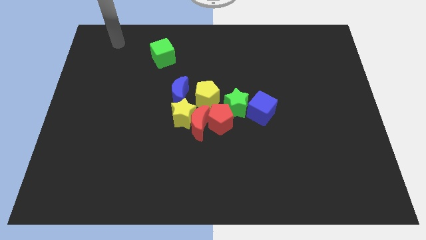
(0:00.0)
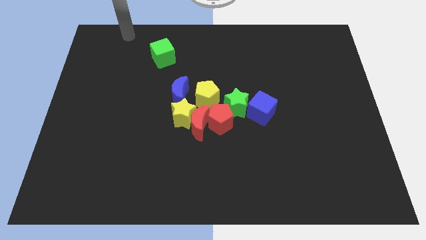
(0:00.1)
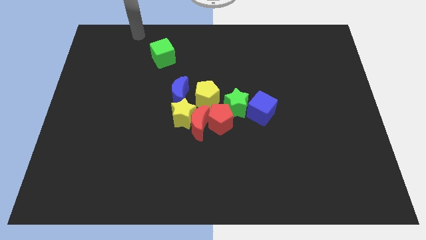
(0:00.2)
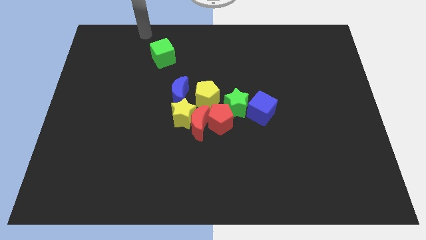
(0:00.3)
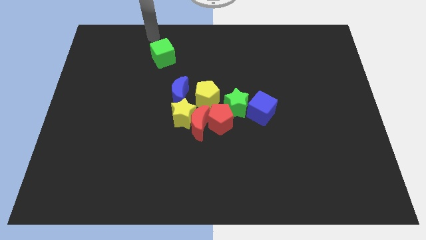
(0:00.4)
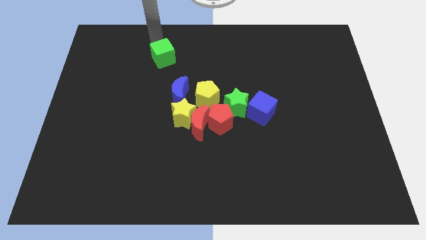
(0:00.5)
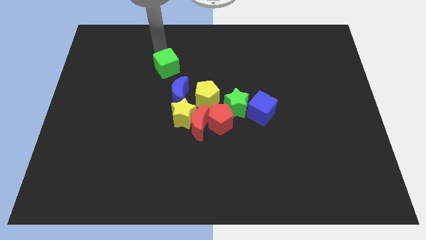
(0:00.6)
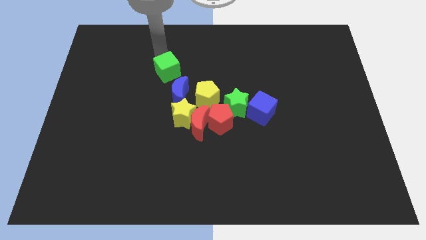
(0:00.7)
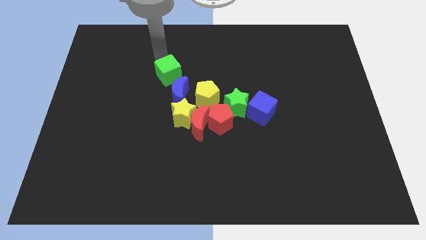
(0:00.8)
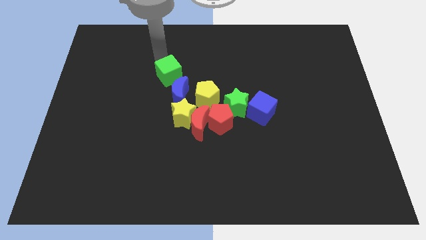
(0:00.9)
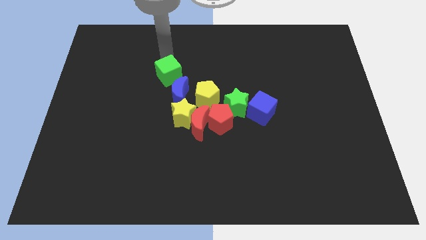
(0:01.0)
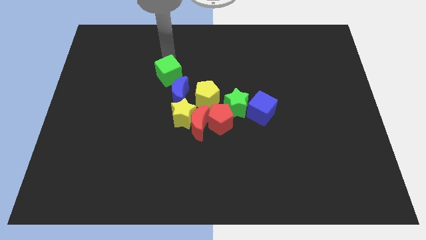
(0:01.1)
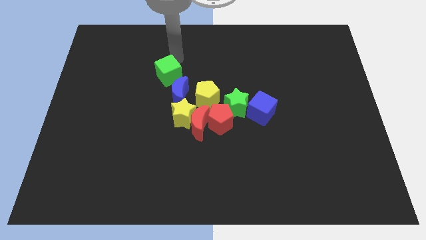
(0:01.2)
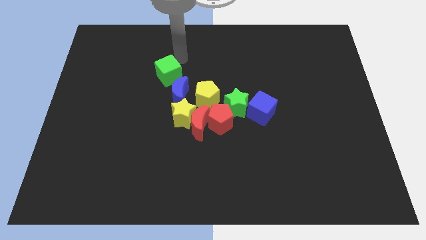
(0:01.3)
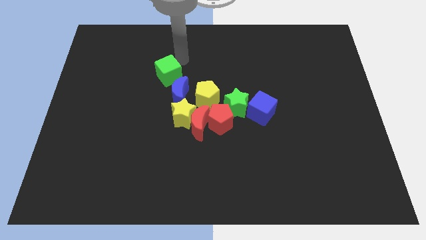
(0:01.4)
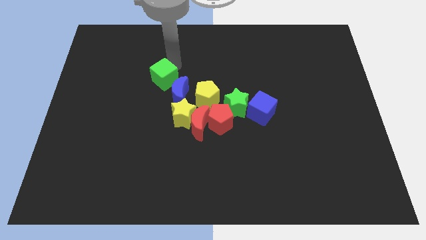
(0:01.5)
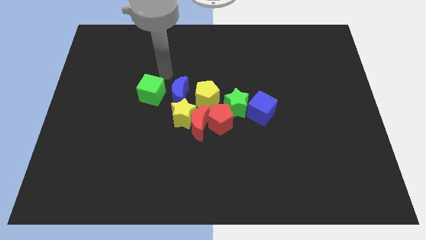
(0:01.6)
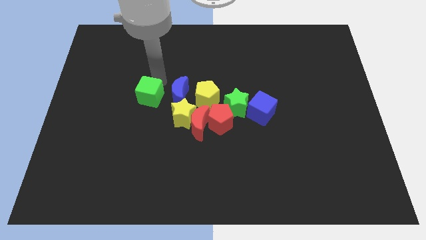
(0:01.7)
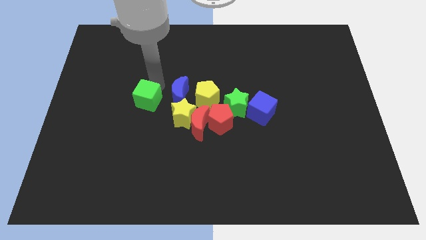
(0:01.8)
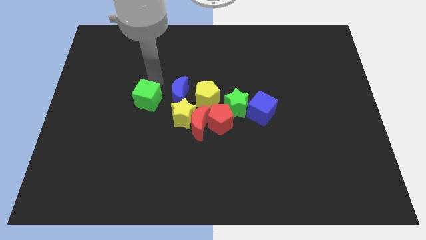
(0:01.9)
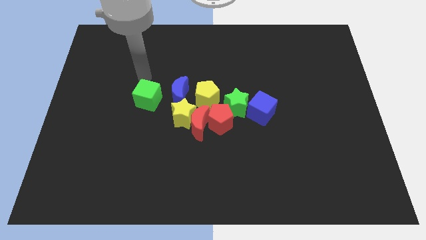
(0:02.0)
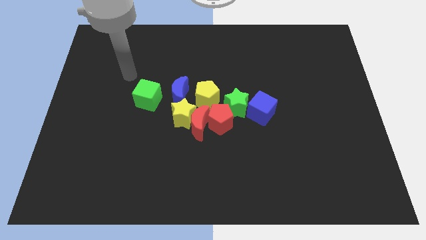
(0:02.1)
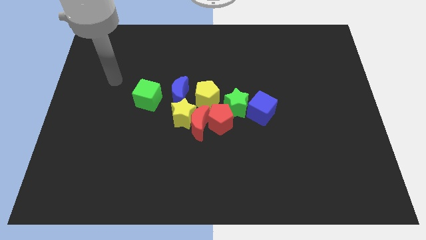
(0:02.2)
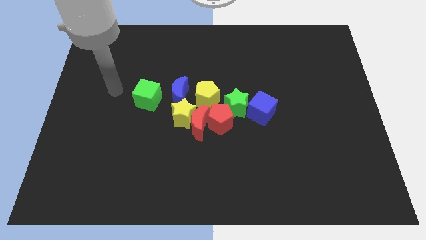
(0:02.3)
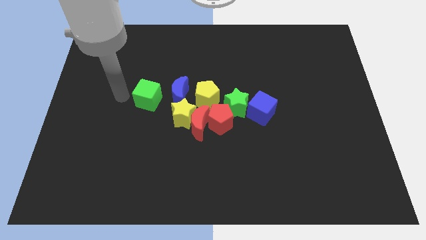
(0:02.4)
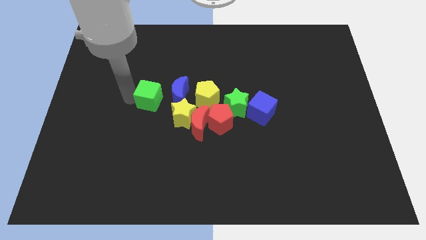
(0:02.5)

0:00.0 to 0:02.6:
move the green cube slightly to the bottom side of the board

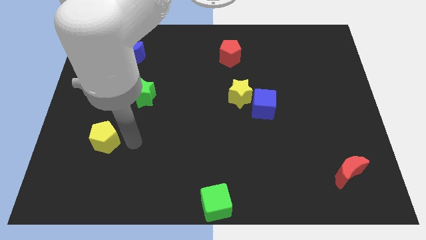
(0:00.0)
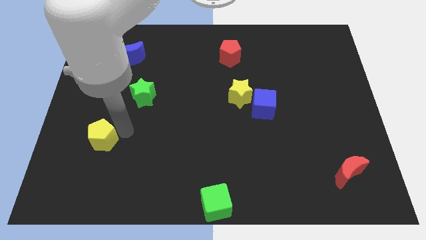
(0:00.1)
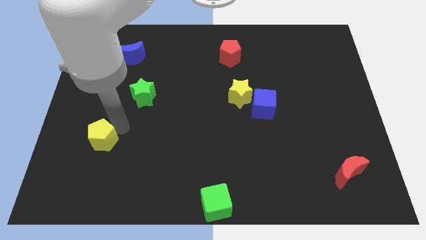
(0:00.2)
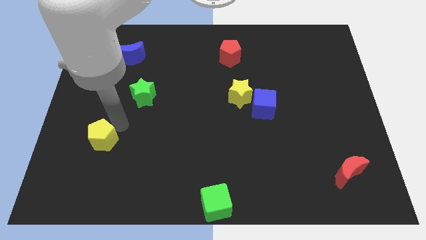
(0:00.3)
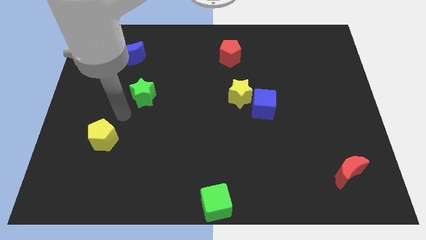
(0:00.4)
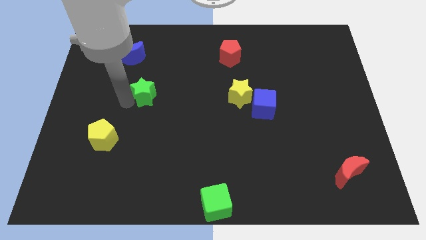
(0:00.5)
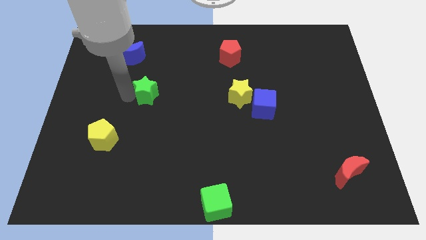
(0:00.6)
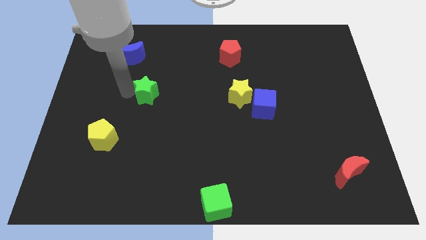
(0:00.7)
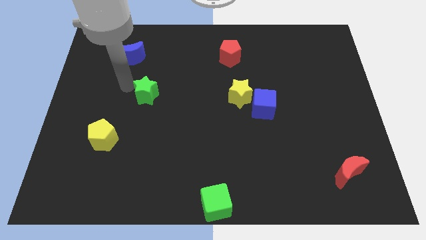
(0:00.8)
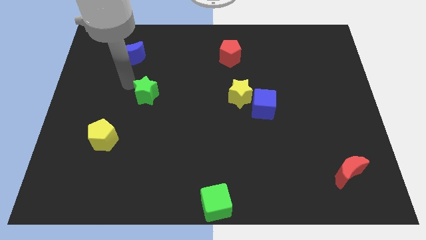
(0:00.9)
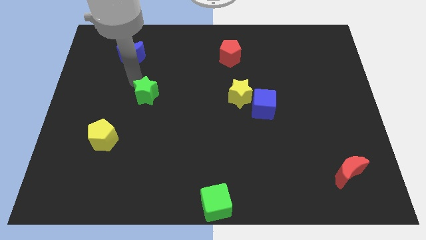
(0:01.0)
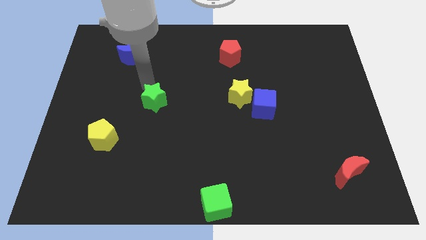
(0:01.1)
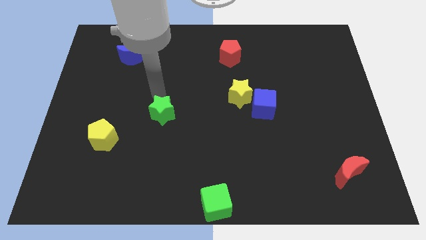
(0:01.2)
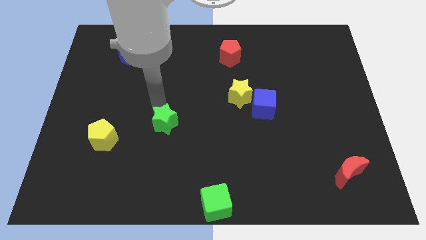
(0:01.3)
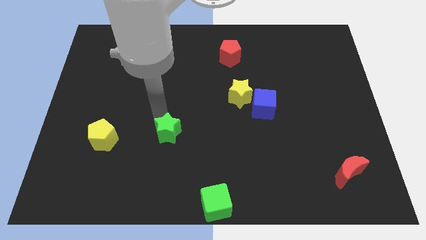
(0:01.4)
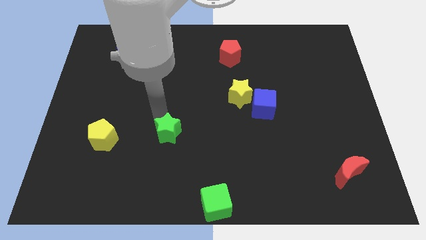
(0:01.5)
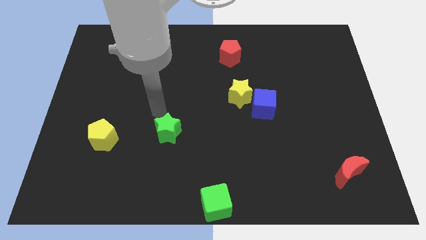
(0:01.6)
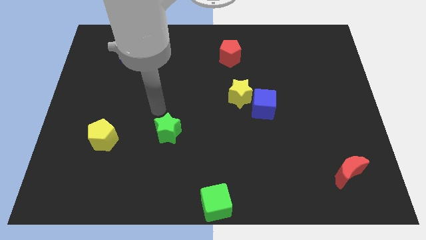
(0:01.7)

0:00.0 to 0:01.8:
place the green star to the right side of the yellow pentagon

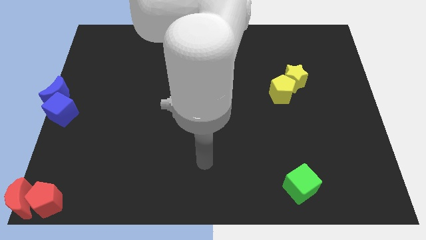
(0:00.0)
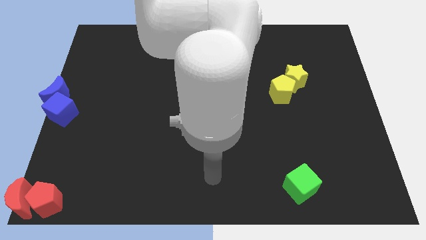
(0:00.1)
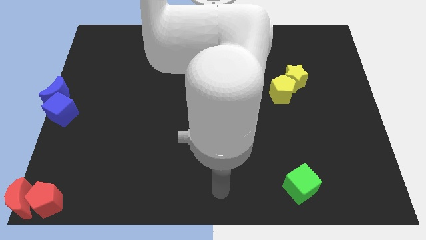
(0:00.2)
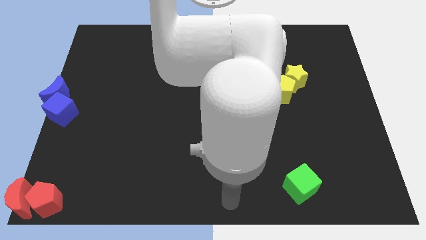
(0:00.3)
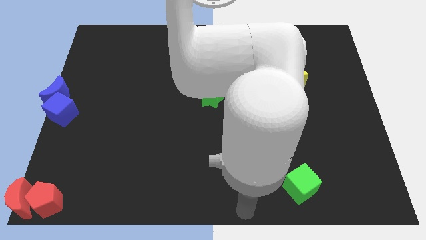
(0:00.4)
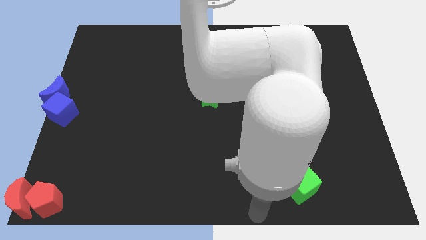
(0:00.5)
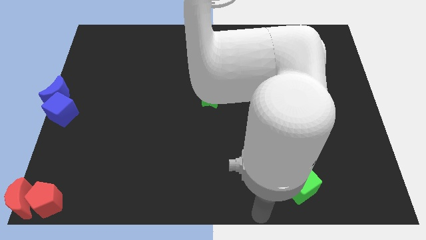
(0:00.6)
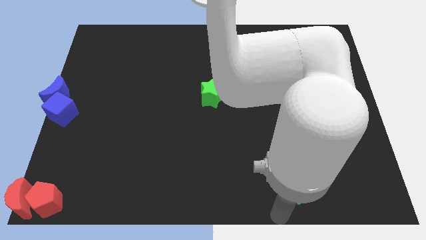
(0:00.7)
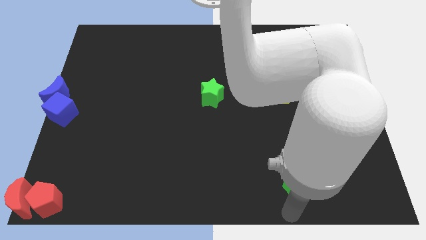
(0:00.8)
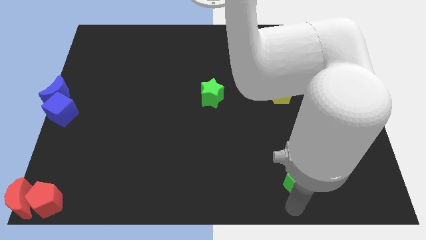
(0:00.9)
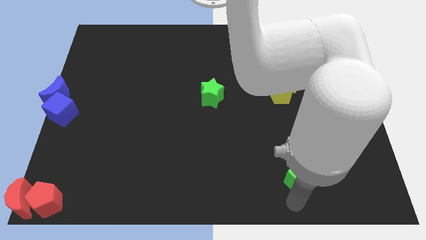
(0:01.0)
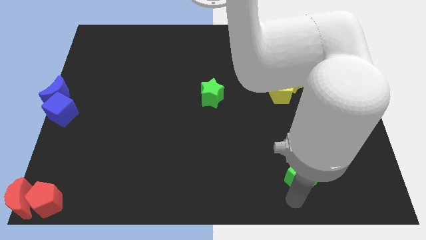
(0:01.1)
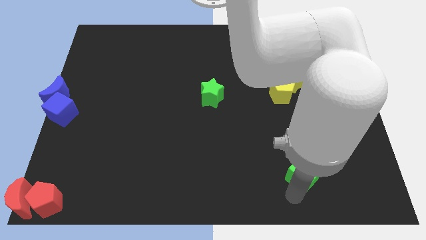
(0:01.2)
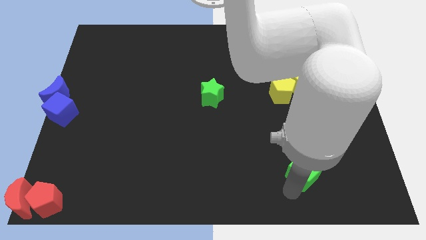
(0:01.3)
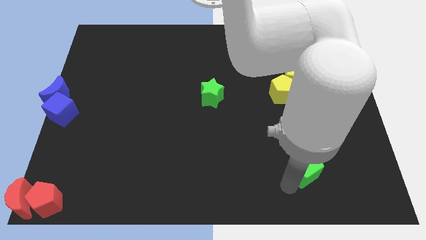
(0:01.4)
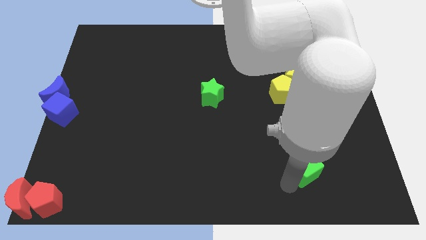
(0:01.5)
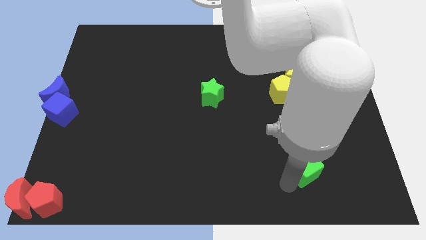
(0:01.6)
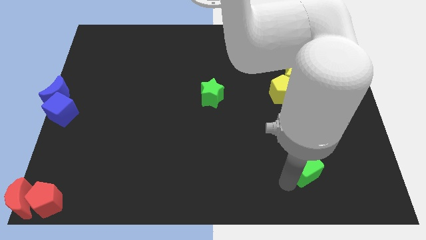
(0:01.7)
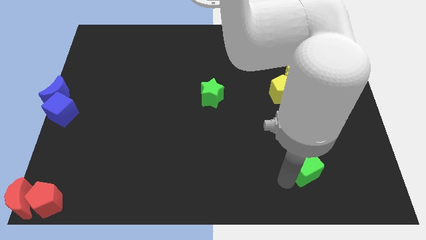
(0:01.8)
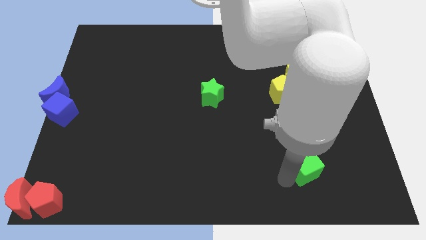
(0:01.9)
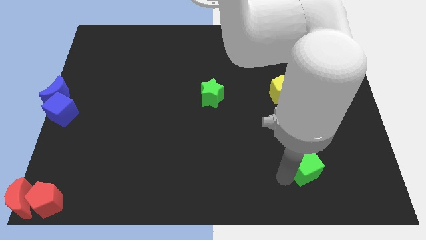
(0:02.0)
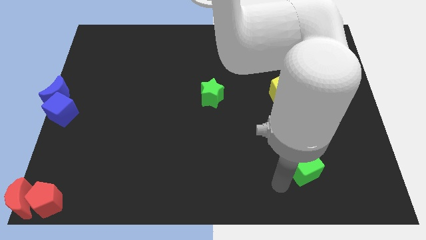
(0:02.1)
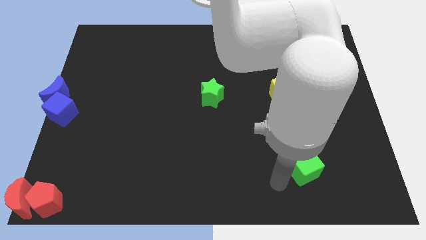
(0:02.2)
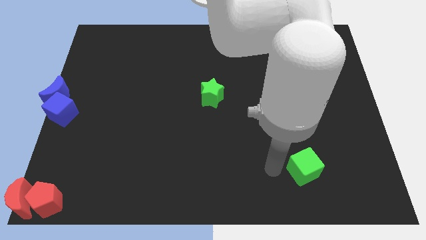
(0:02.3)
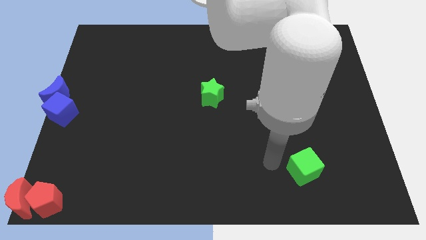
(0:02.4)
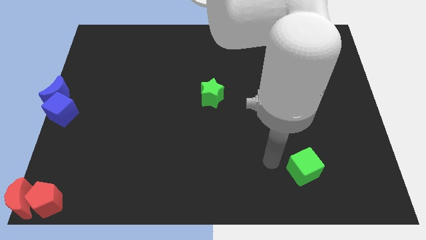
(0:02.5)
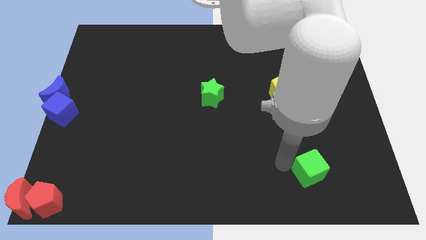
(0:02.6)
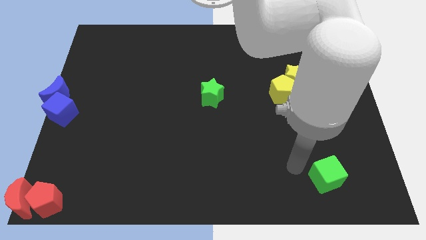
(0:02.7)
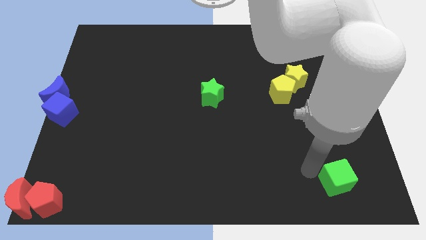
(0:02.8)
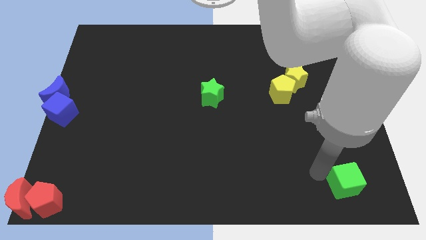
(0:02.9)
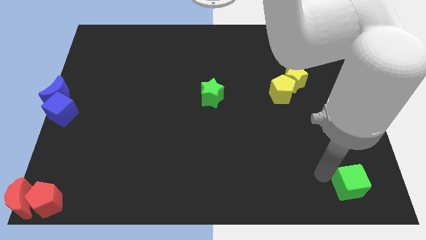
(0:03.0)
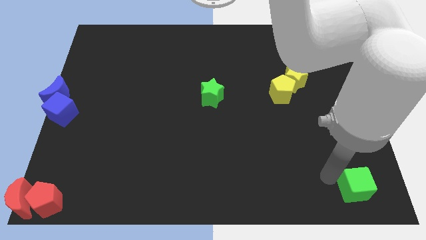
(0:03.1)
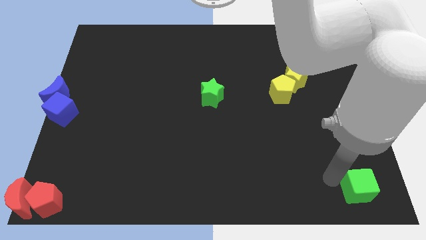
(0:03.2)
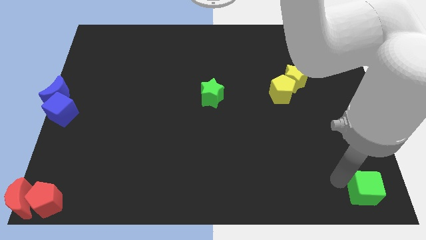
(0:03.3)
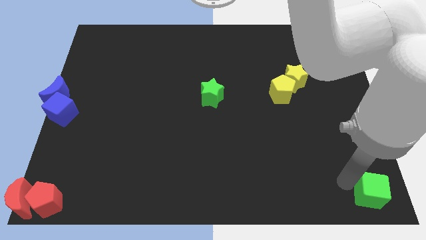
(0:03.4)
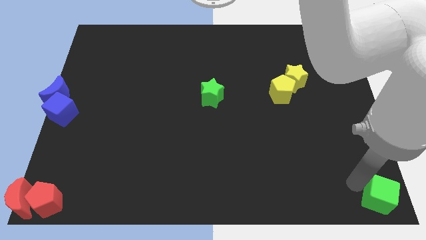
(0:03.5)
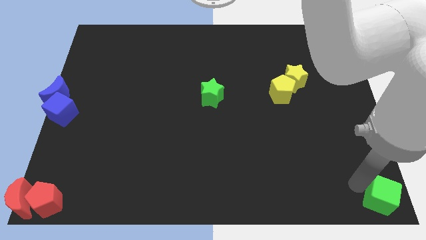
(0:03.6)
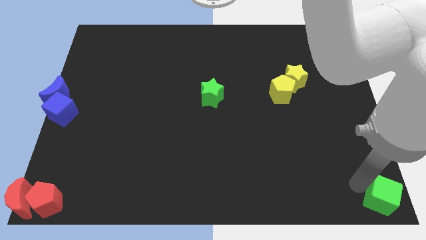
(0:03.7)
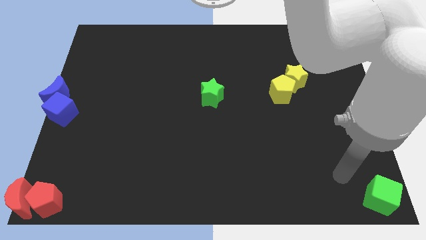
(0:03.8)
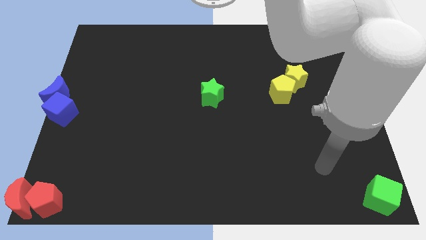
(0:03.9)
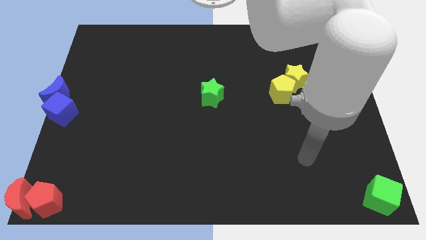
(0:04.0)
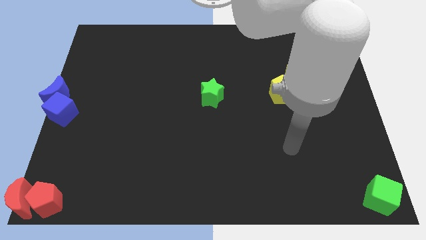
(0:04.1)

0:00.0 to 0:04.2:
place the green cube to the bottom right

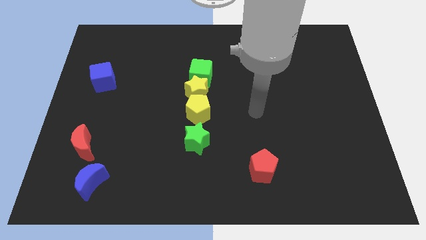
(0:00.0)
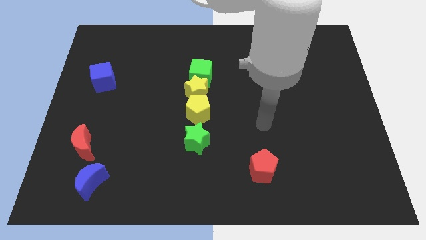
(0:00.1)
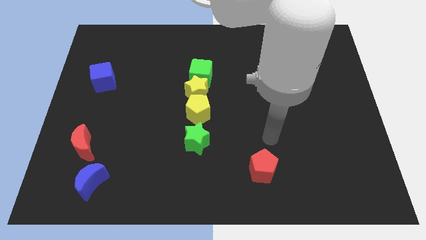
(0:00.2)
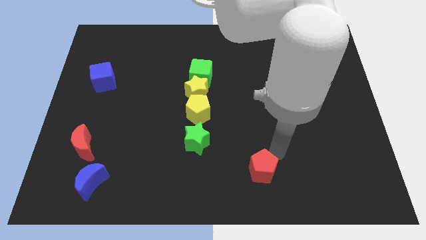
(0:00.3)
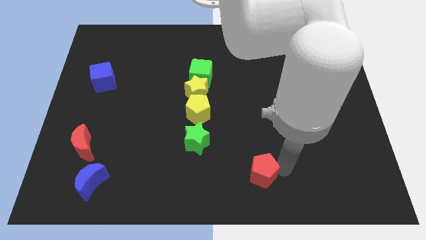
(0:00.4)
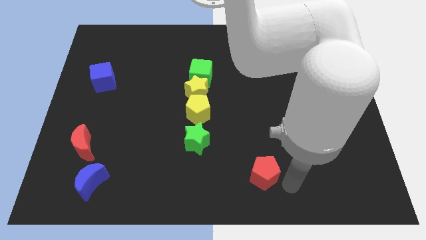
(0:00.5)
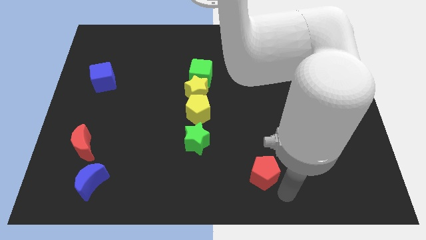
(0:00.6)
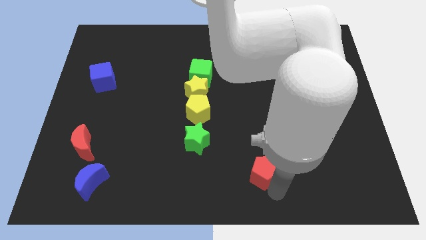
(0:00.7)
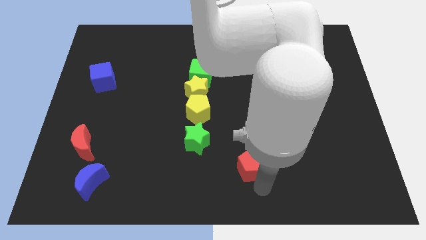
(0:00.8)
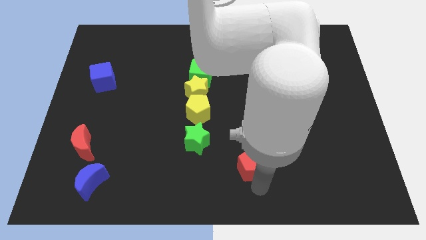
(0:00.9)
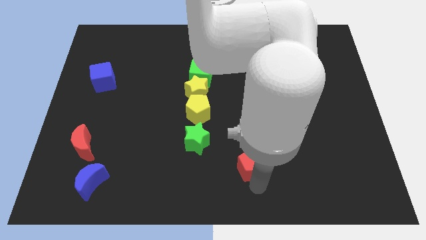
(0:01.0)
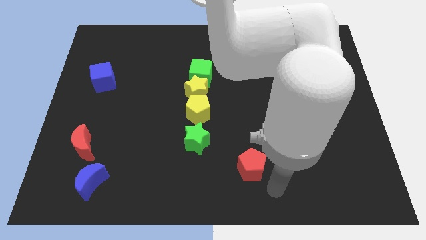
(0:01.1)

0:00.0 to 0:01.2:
move the red pentagon up slightly
